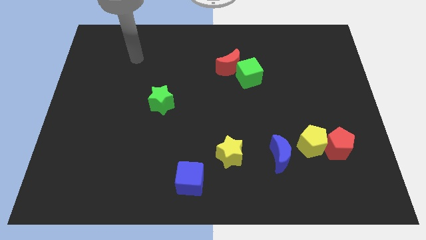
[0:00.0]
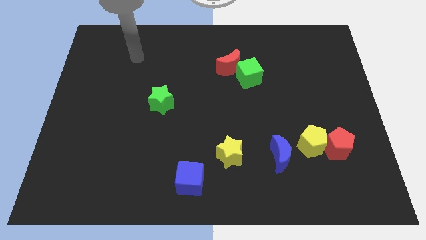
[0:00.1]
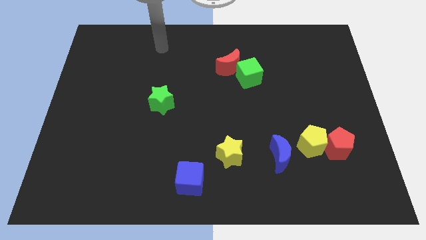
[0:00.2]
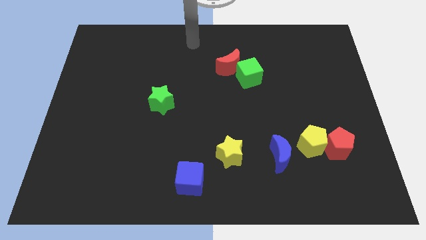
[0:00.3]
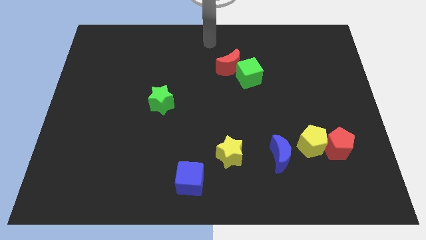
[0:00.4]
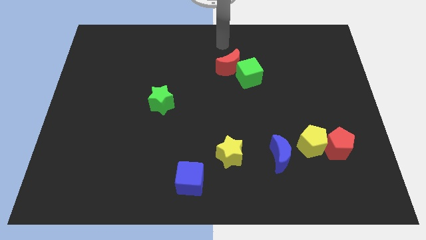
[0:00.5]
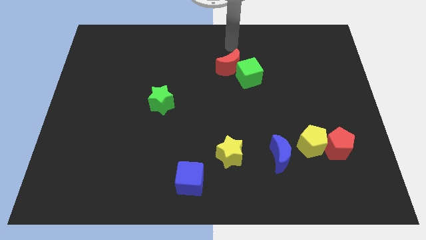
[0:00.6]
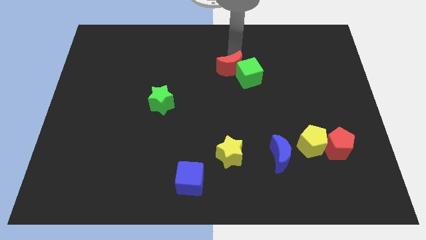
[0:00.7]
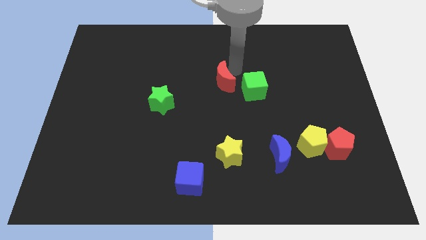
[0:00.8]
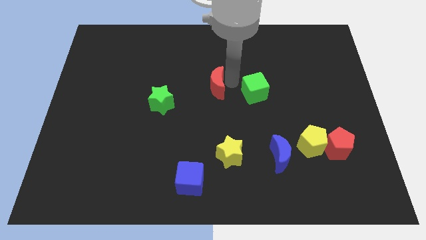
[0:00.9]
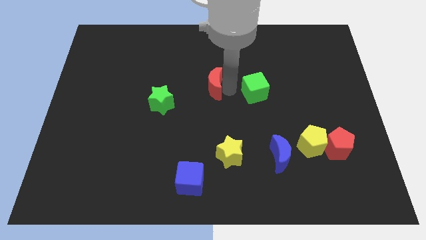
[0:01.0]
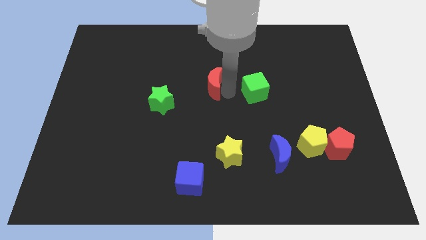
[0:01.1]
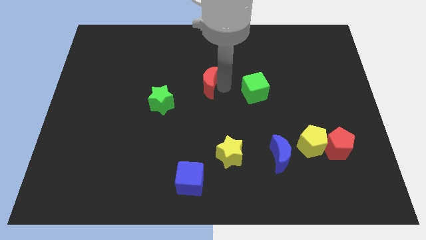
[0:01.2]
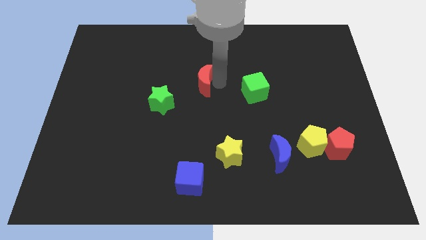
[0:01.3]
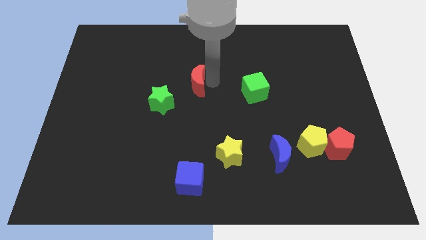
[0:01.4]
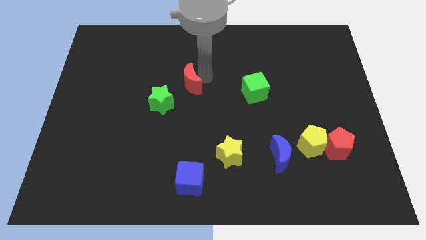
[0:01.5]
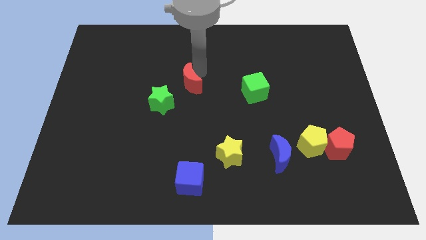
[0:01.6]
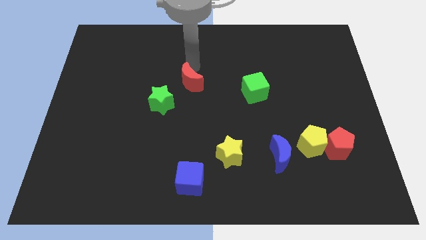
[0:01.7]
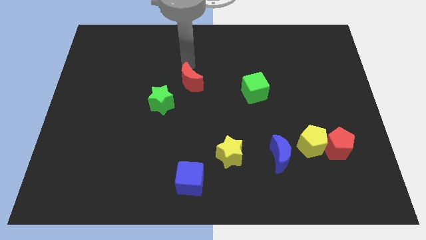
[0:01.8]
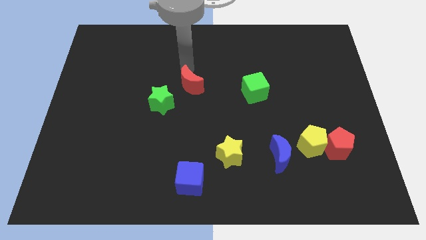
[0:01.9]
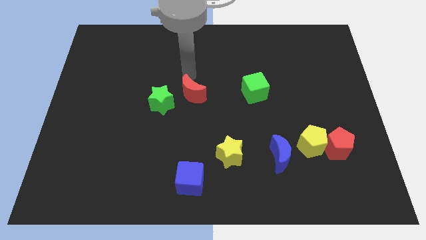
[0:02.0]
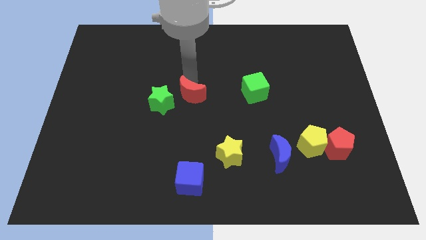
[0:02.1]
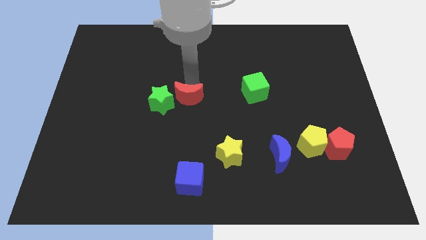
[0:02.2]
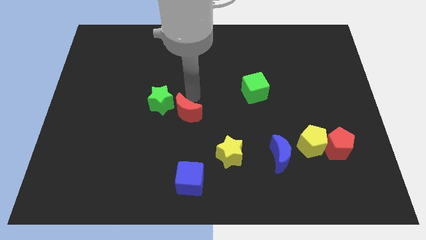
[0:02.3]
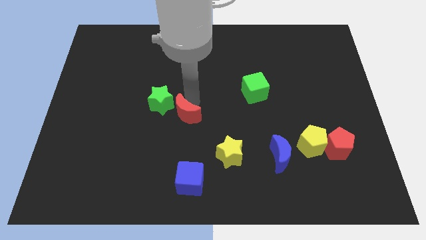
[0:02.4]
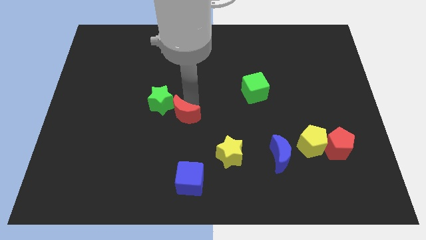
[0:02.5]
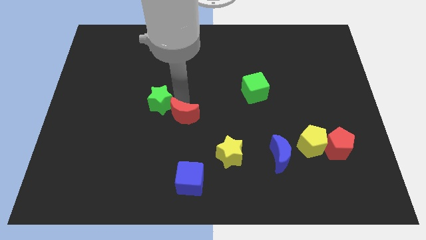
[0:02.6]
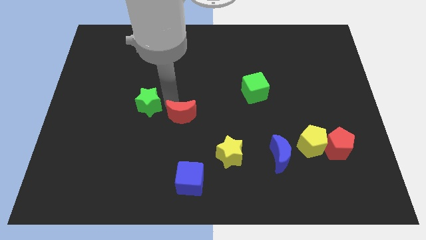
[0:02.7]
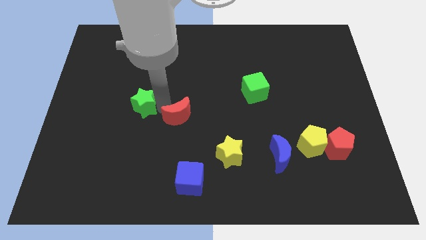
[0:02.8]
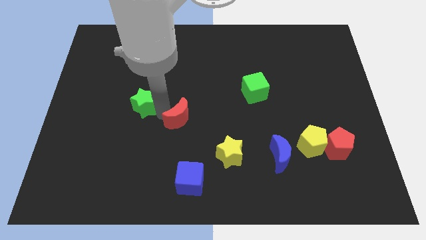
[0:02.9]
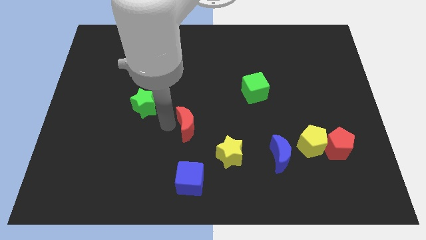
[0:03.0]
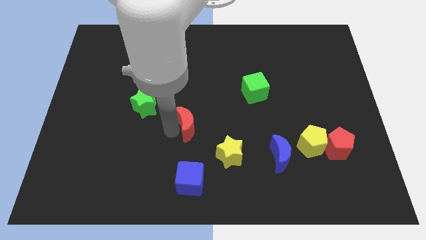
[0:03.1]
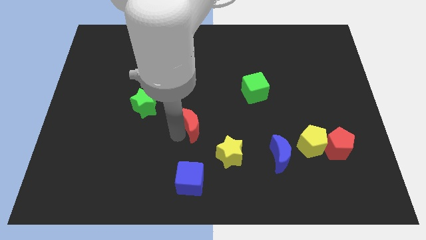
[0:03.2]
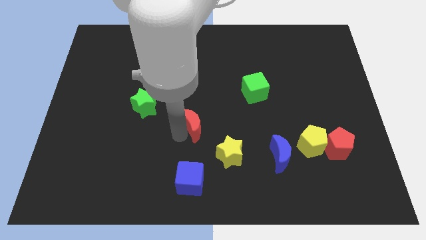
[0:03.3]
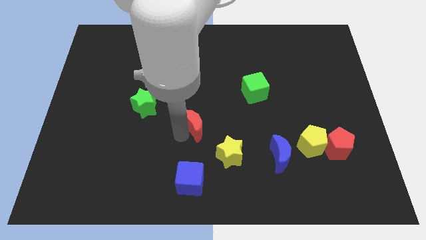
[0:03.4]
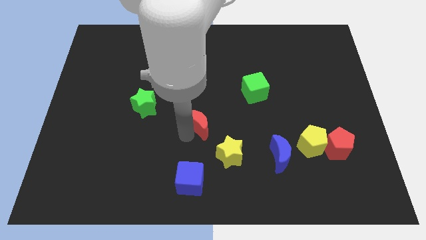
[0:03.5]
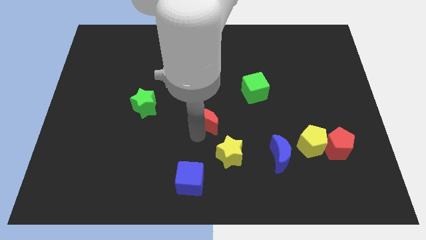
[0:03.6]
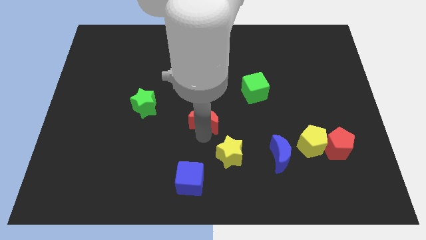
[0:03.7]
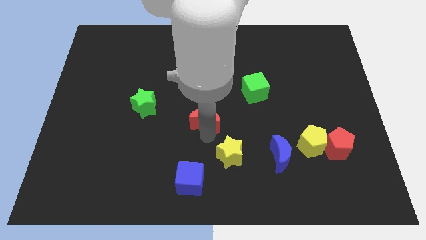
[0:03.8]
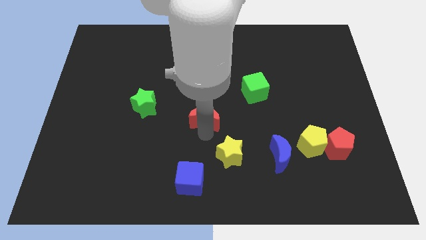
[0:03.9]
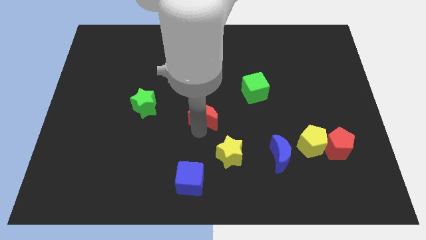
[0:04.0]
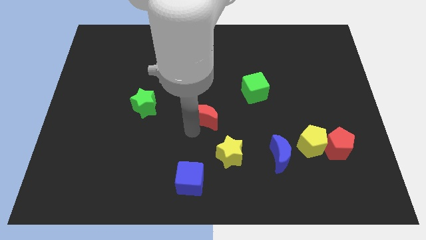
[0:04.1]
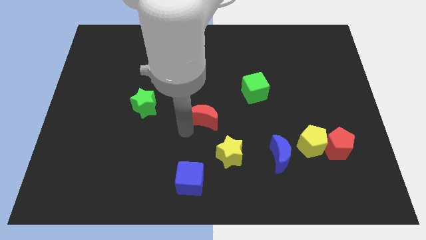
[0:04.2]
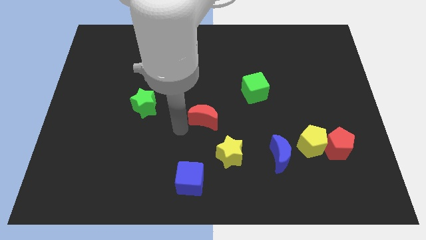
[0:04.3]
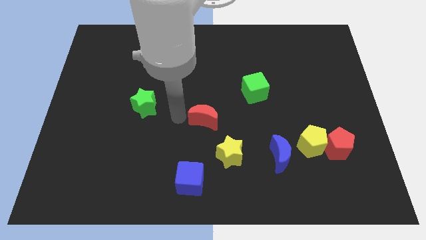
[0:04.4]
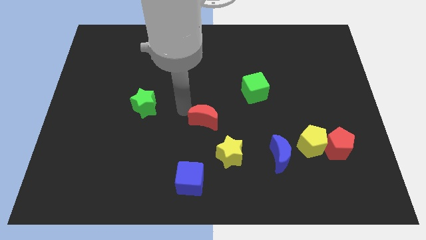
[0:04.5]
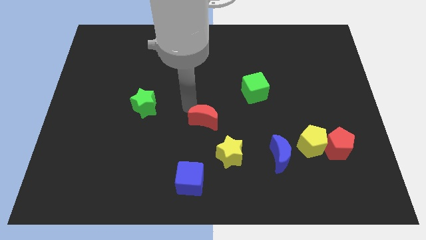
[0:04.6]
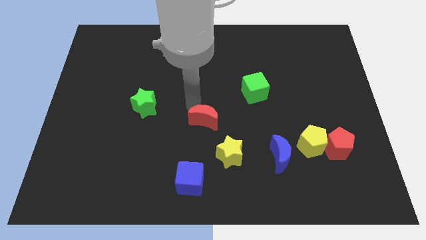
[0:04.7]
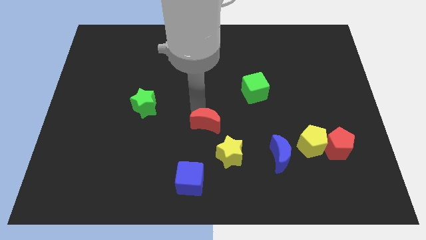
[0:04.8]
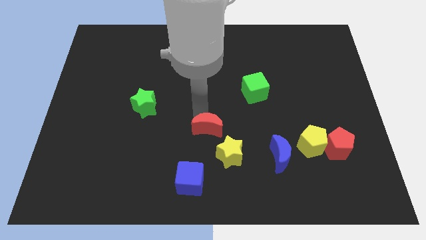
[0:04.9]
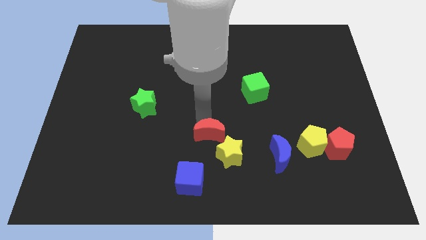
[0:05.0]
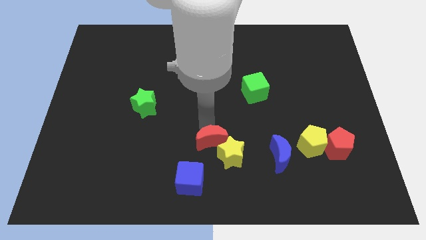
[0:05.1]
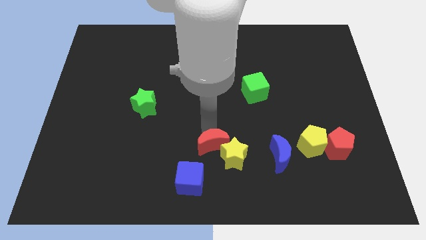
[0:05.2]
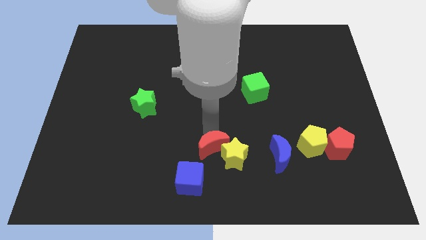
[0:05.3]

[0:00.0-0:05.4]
push the red moon next to the yellow star

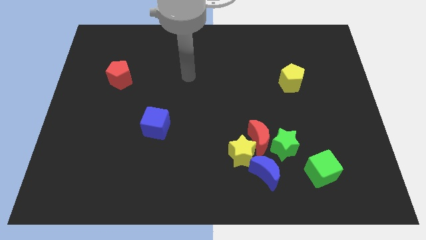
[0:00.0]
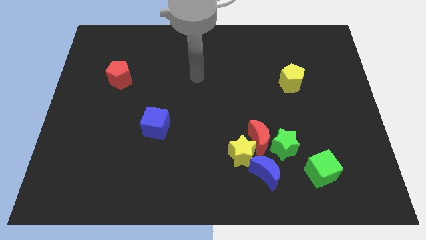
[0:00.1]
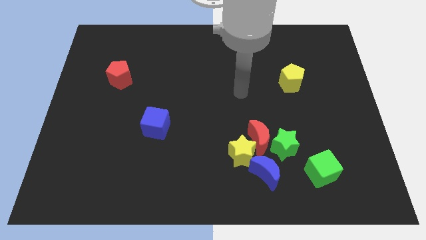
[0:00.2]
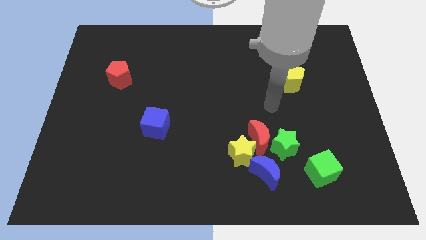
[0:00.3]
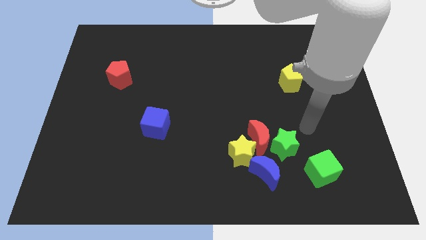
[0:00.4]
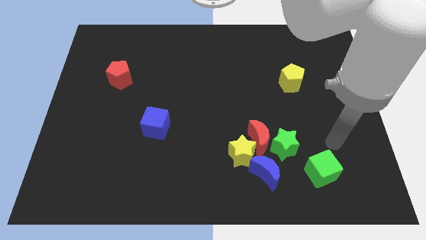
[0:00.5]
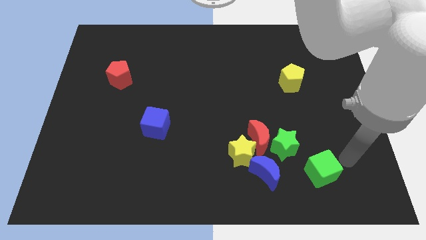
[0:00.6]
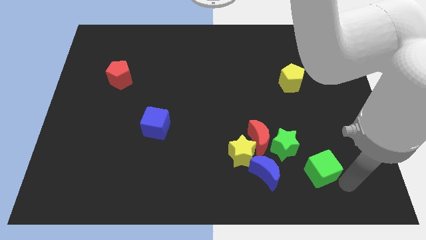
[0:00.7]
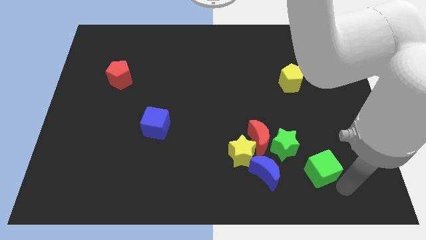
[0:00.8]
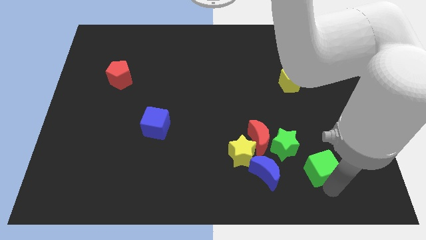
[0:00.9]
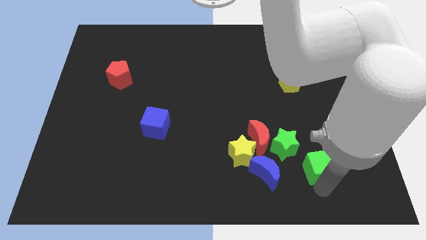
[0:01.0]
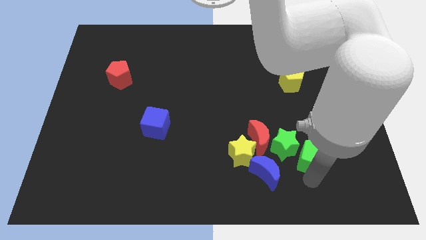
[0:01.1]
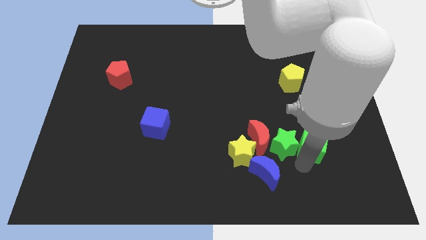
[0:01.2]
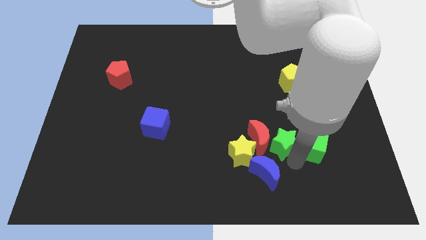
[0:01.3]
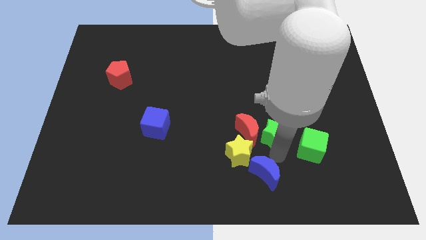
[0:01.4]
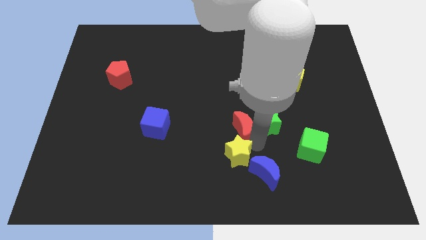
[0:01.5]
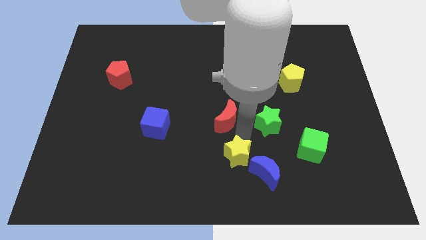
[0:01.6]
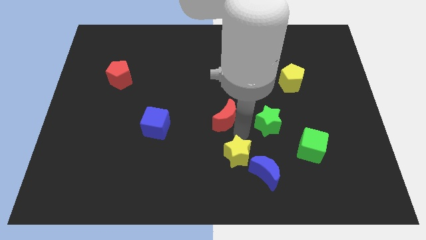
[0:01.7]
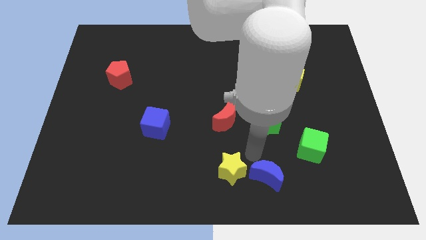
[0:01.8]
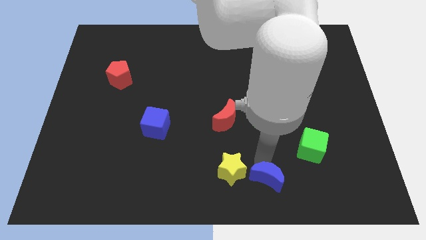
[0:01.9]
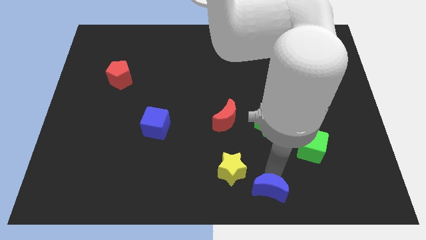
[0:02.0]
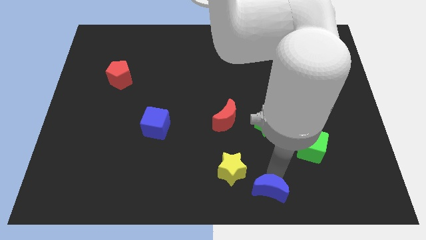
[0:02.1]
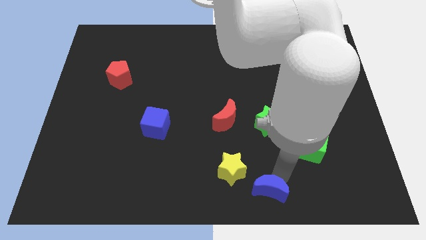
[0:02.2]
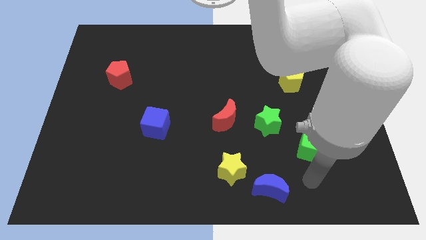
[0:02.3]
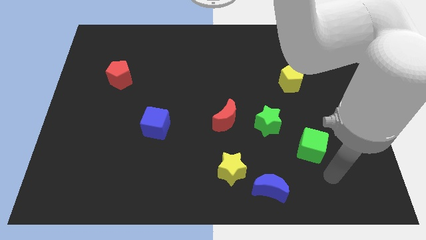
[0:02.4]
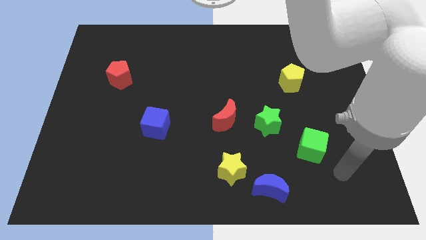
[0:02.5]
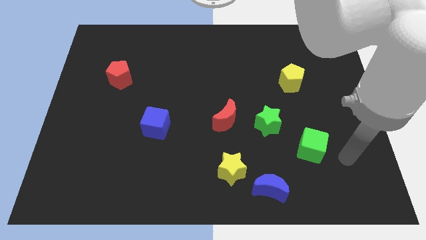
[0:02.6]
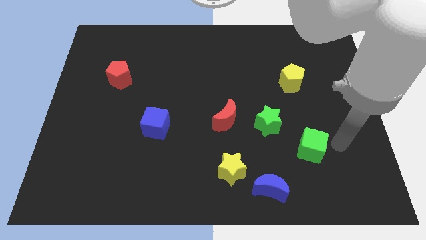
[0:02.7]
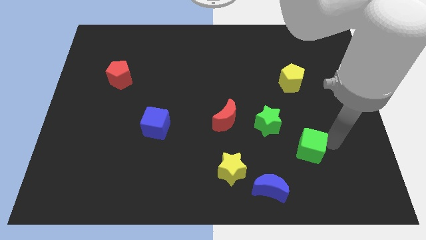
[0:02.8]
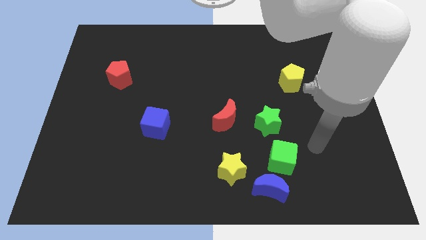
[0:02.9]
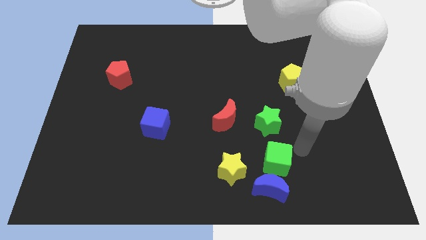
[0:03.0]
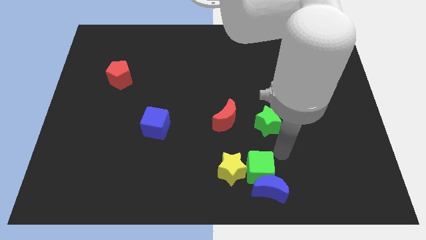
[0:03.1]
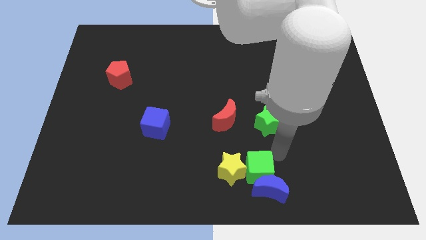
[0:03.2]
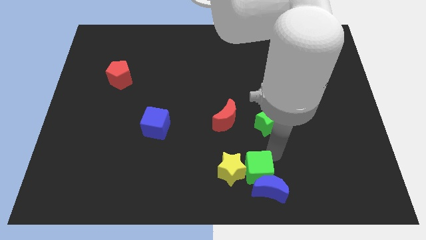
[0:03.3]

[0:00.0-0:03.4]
slide the green cube close to the yellow star
